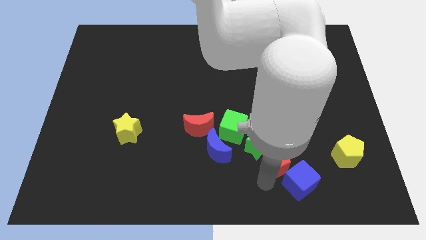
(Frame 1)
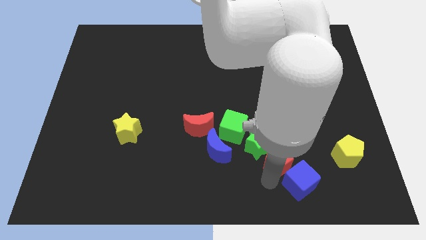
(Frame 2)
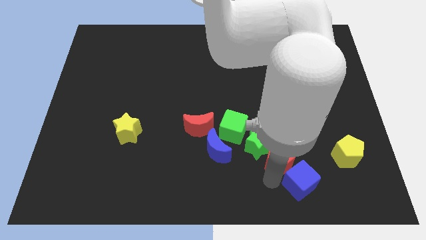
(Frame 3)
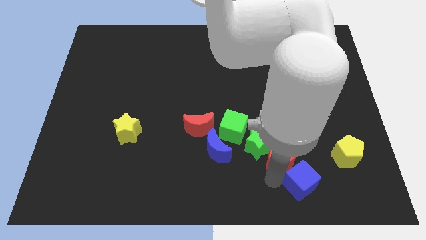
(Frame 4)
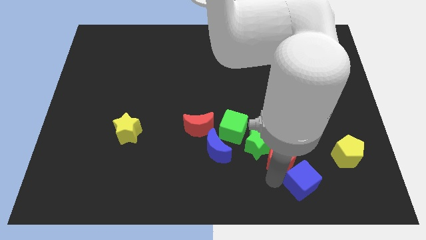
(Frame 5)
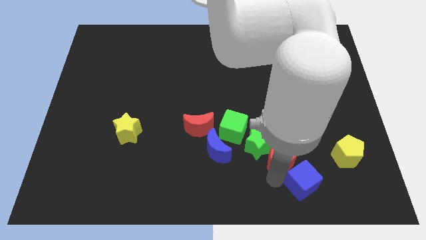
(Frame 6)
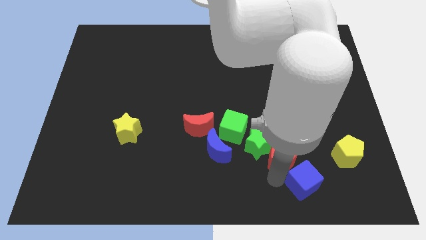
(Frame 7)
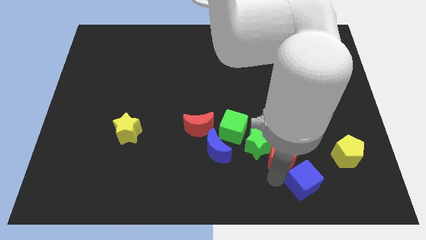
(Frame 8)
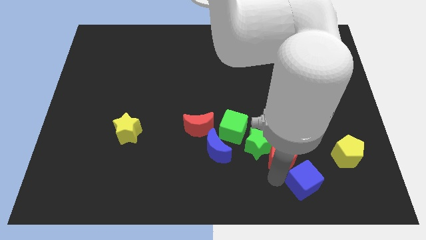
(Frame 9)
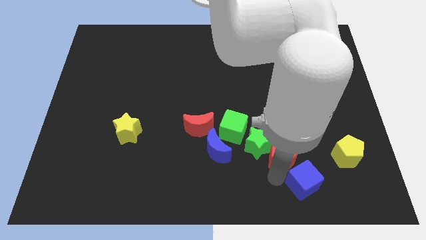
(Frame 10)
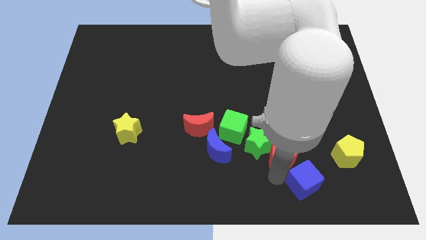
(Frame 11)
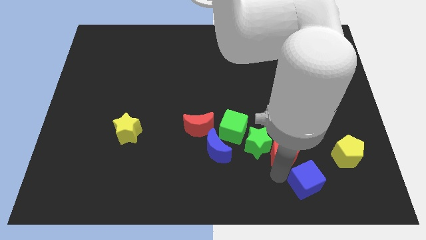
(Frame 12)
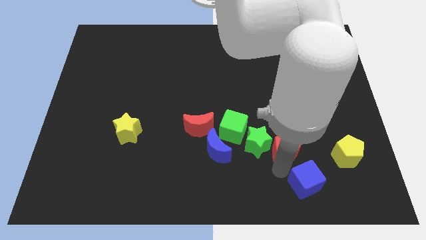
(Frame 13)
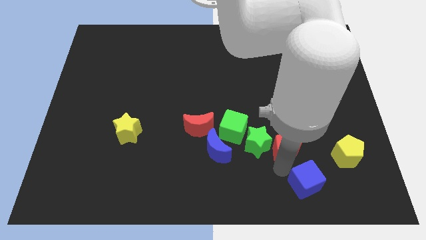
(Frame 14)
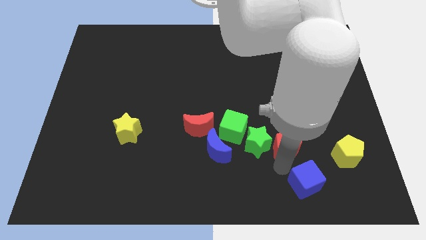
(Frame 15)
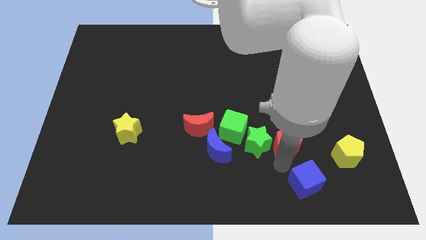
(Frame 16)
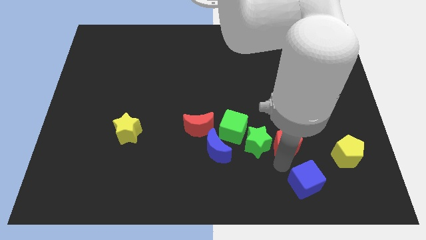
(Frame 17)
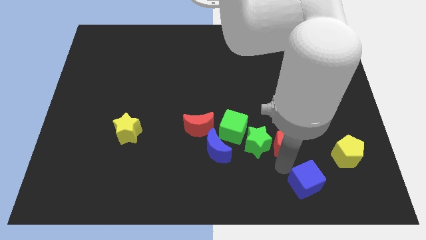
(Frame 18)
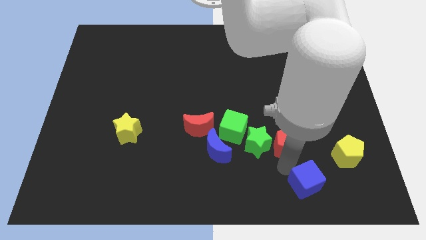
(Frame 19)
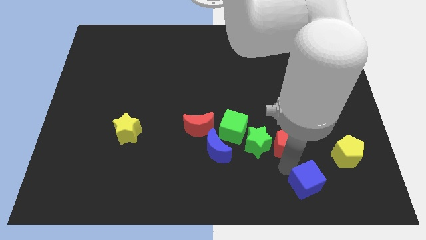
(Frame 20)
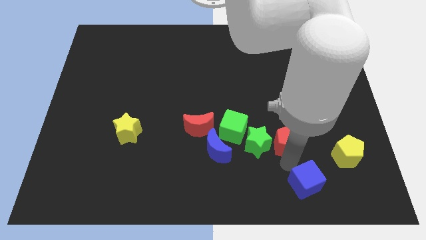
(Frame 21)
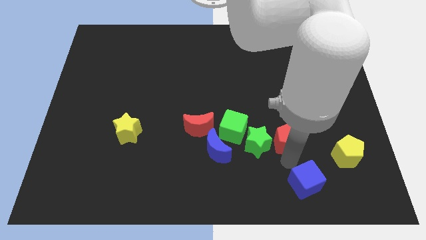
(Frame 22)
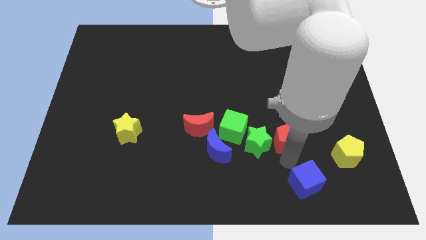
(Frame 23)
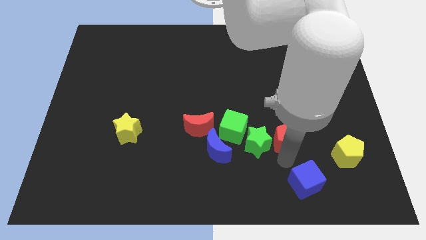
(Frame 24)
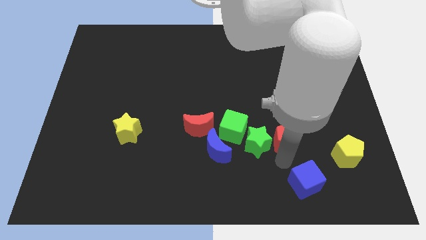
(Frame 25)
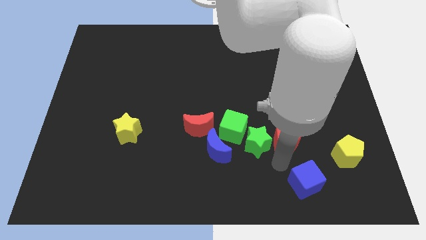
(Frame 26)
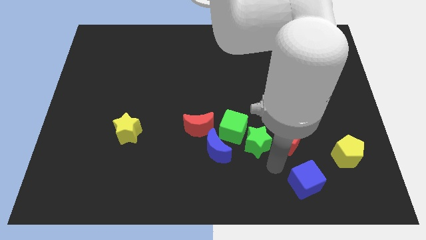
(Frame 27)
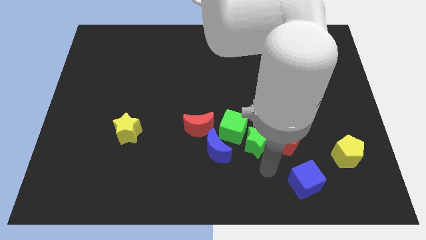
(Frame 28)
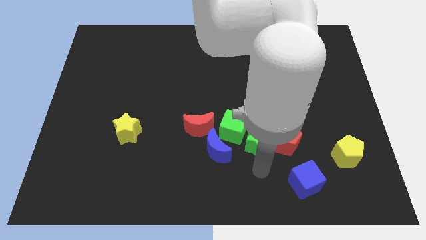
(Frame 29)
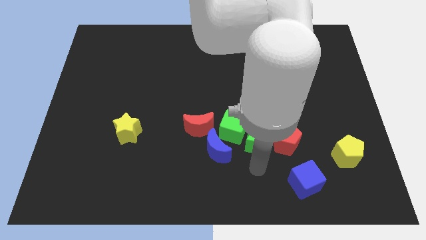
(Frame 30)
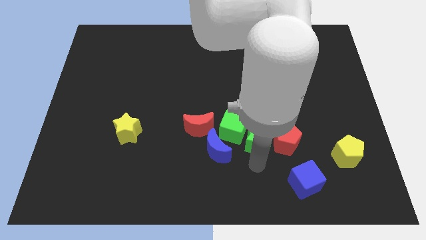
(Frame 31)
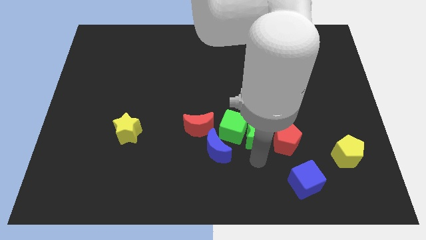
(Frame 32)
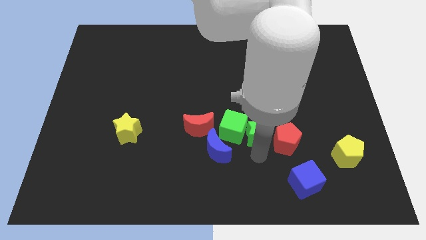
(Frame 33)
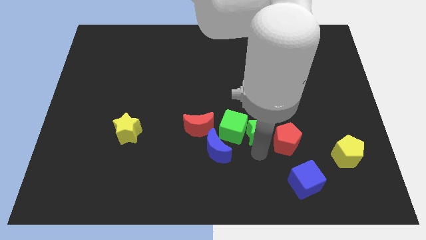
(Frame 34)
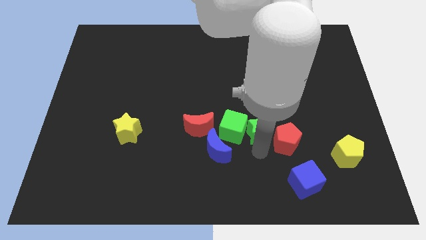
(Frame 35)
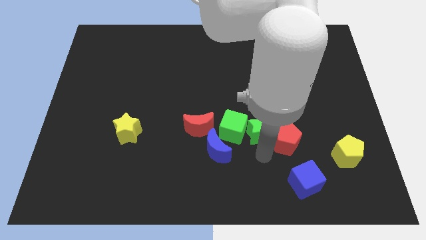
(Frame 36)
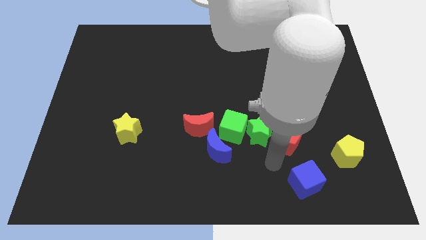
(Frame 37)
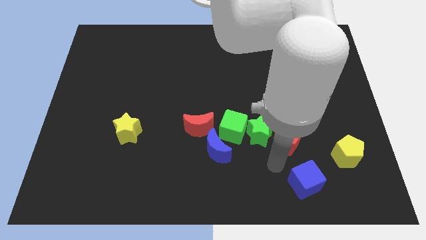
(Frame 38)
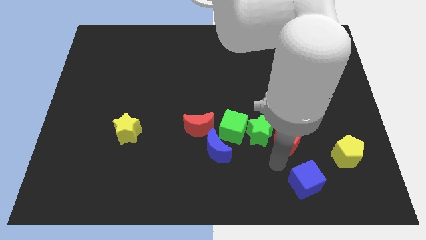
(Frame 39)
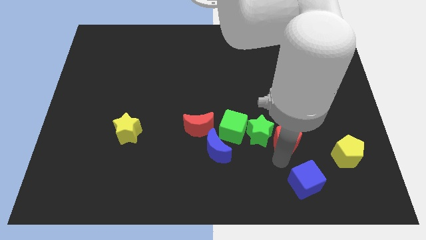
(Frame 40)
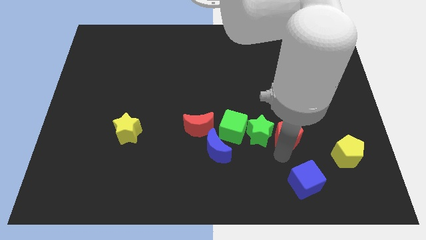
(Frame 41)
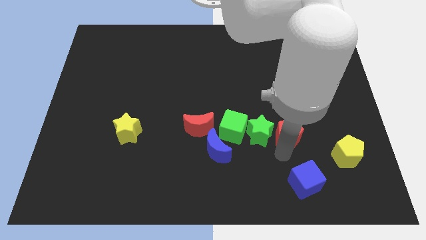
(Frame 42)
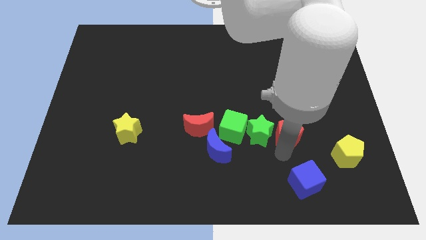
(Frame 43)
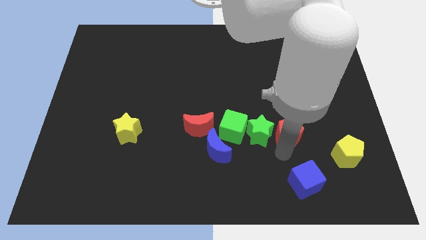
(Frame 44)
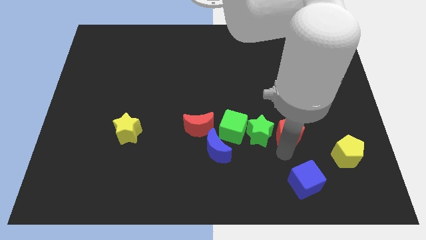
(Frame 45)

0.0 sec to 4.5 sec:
place the red pentagon right to the green star

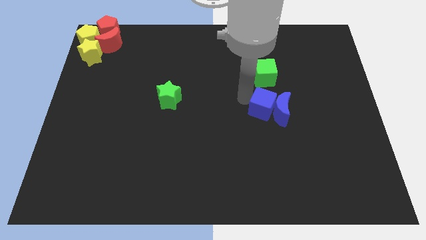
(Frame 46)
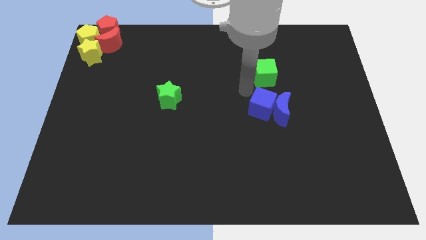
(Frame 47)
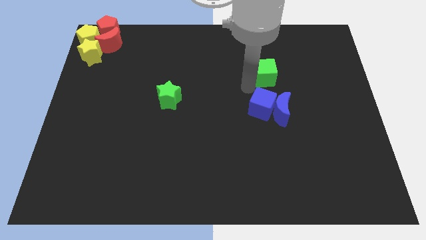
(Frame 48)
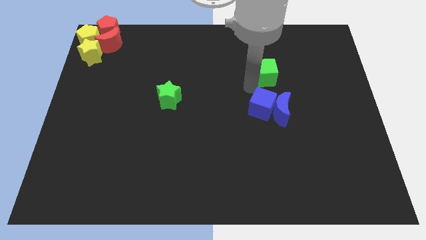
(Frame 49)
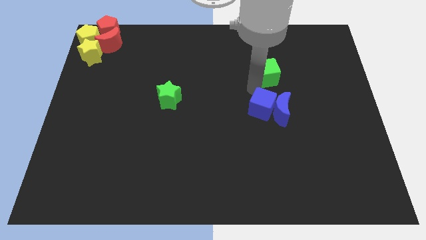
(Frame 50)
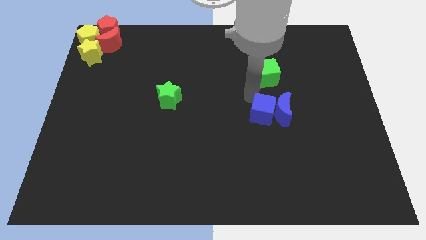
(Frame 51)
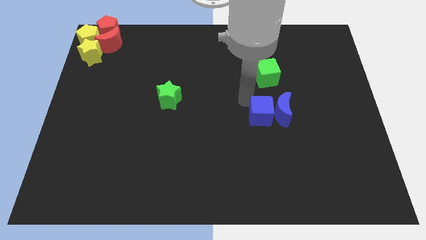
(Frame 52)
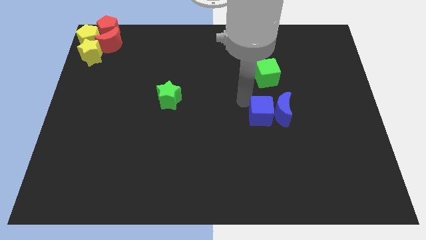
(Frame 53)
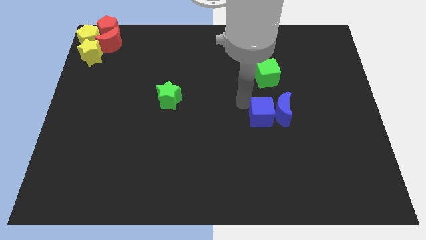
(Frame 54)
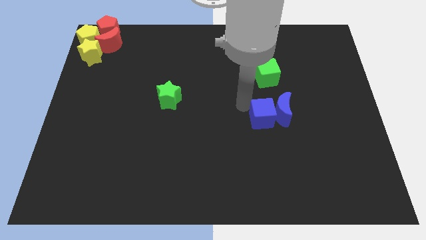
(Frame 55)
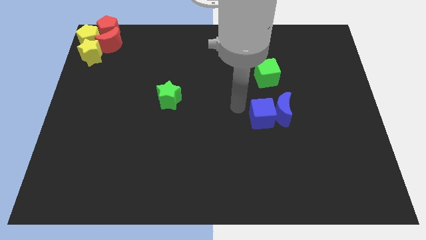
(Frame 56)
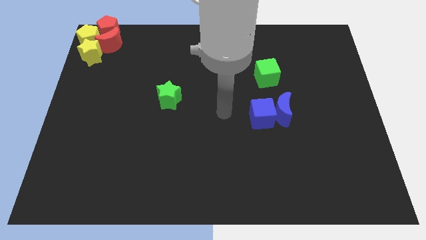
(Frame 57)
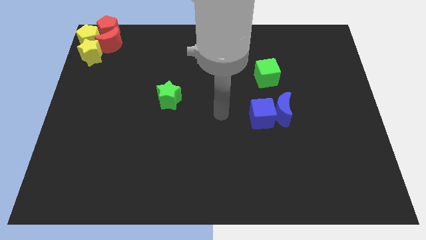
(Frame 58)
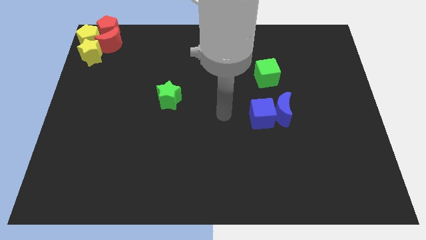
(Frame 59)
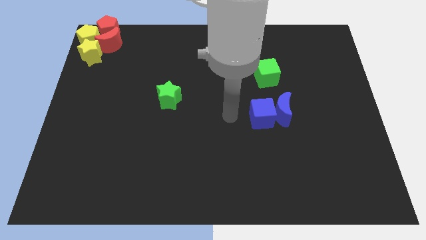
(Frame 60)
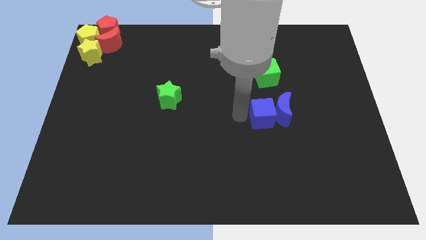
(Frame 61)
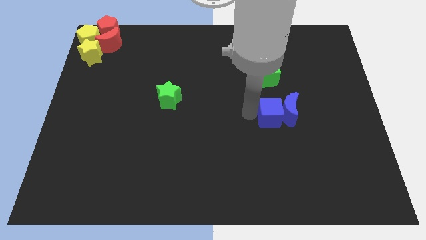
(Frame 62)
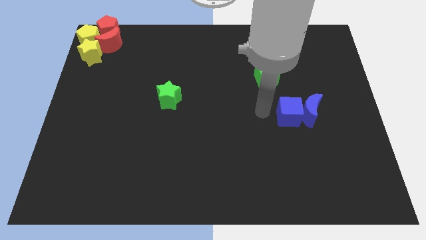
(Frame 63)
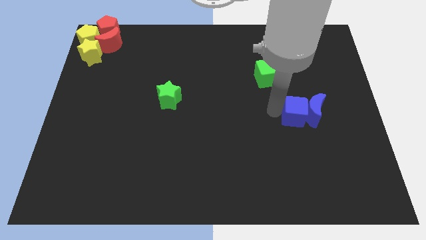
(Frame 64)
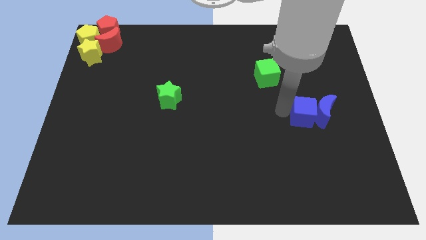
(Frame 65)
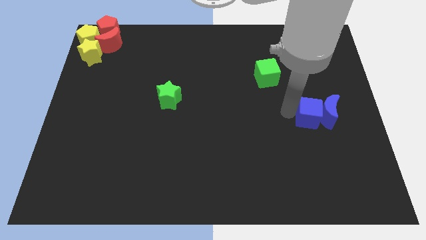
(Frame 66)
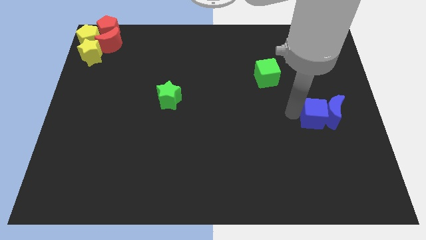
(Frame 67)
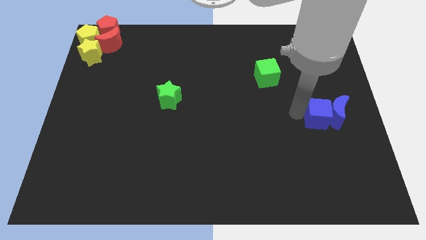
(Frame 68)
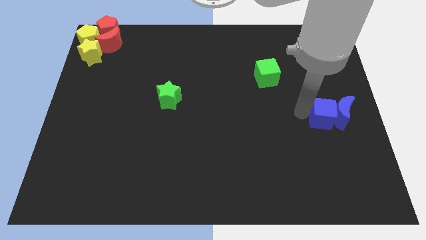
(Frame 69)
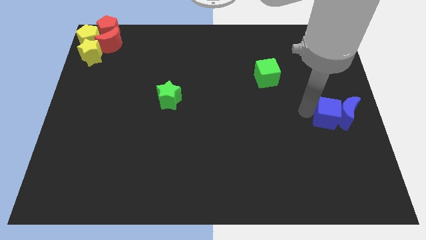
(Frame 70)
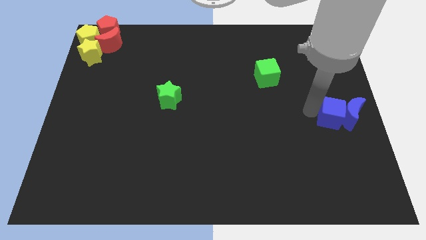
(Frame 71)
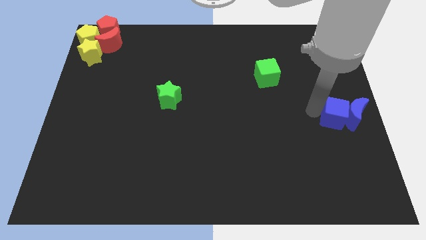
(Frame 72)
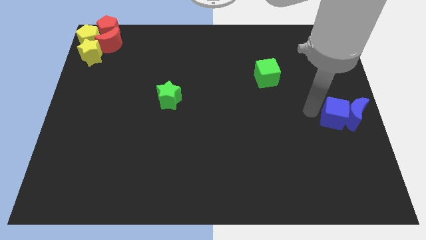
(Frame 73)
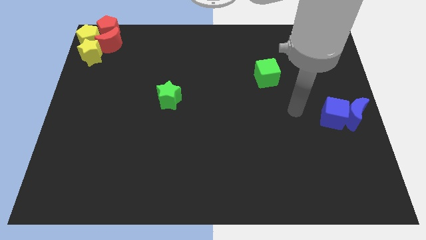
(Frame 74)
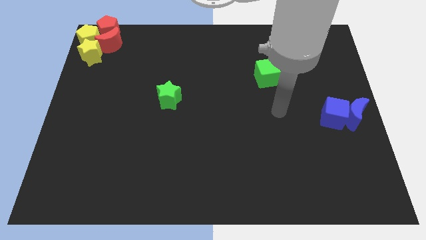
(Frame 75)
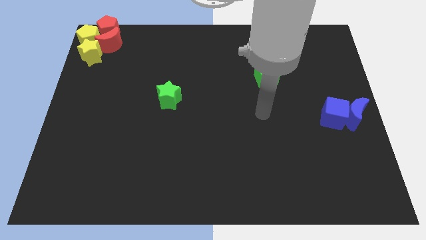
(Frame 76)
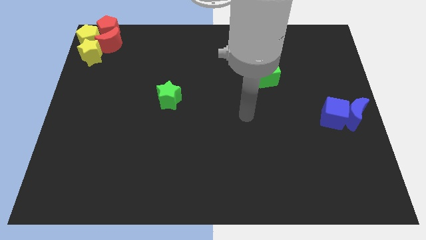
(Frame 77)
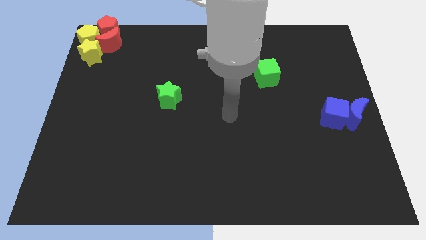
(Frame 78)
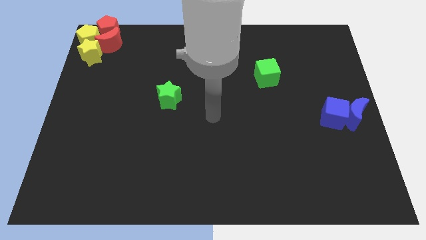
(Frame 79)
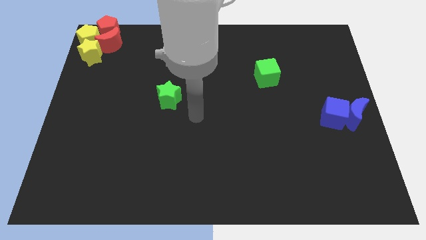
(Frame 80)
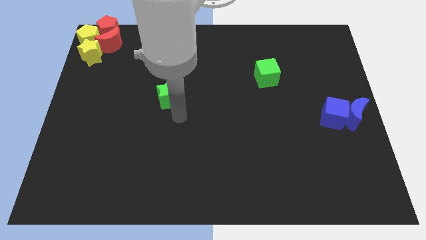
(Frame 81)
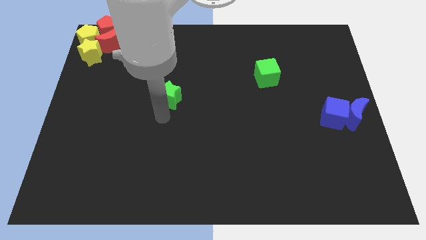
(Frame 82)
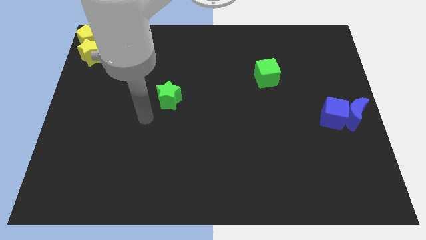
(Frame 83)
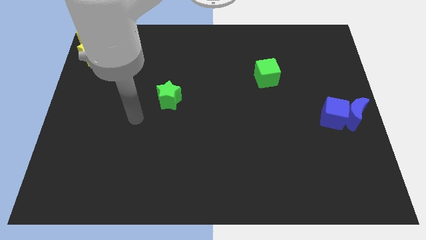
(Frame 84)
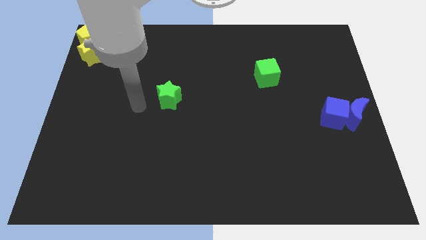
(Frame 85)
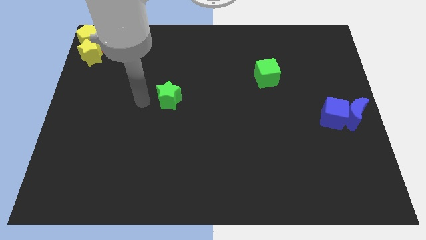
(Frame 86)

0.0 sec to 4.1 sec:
place blue cube and blue moon to the right center of the board

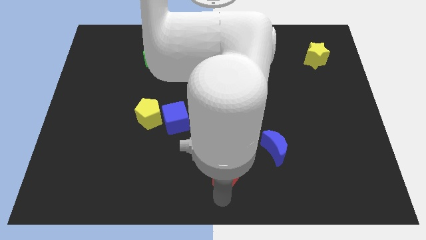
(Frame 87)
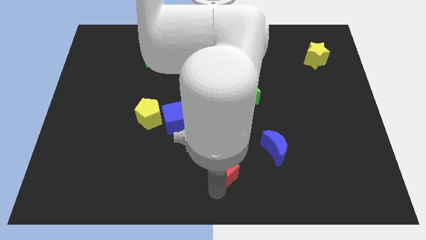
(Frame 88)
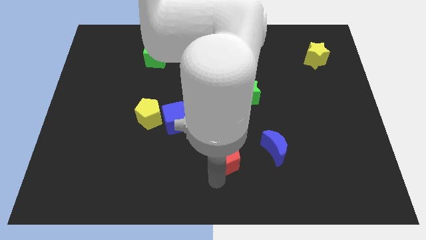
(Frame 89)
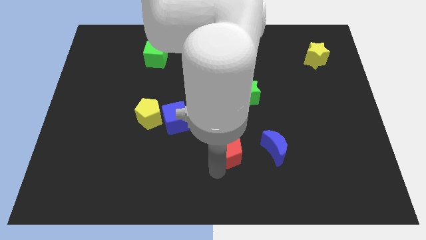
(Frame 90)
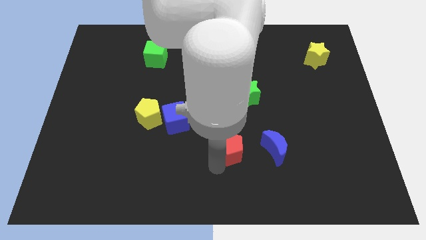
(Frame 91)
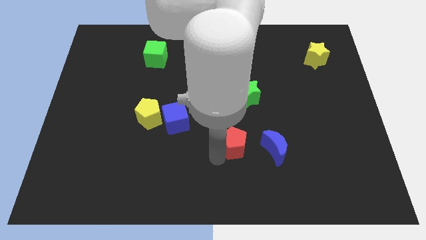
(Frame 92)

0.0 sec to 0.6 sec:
push red pentagon slightly upwards
